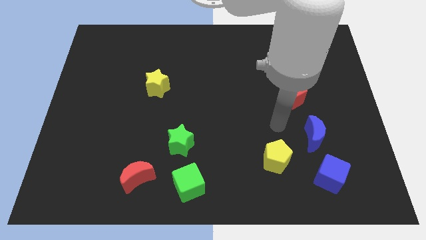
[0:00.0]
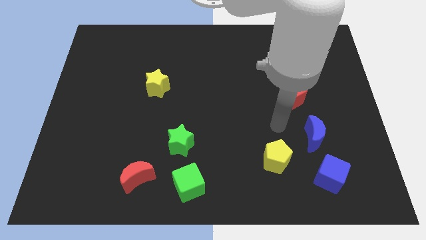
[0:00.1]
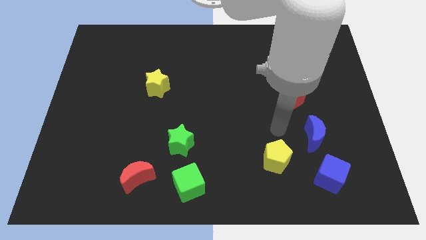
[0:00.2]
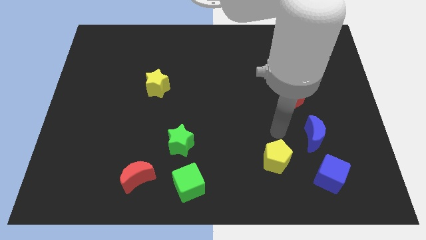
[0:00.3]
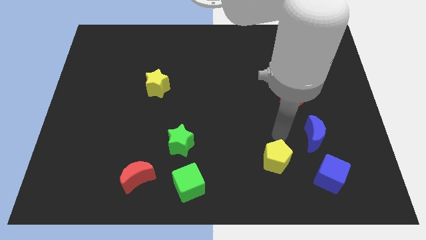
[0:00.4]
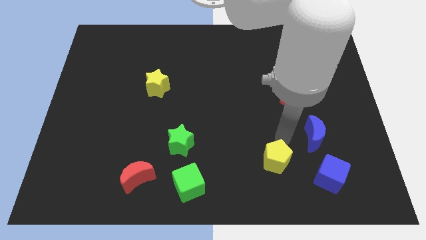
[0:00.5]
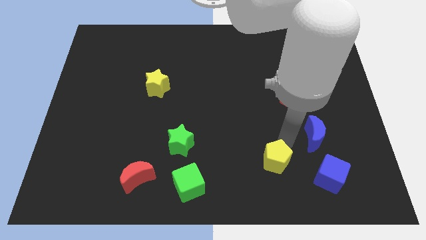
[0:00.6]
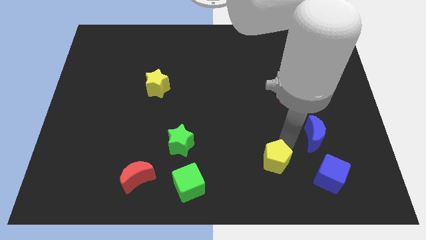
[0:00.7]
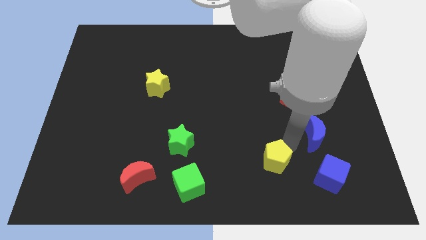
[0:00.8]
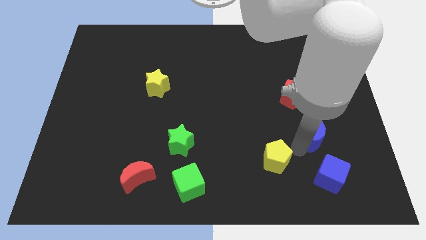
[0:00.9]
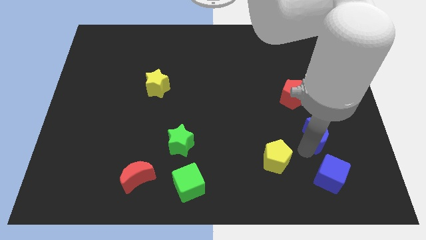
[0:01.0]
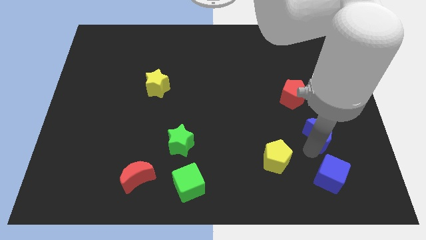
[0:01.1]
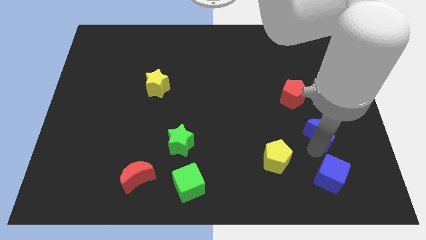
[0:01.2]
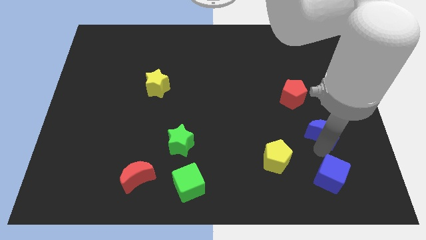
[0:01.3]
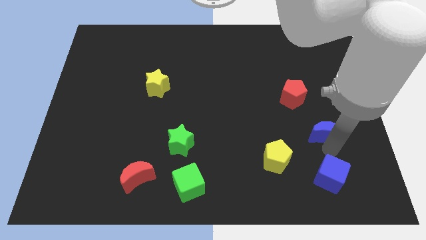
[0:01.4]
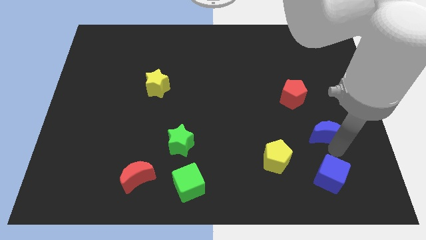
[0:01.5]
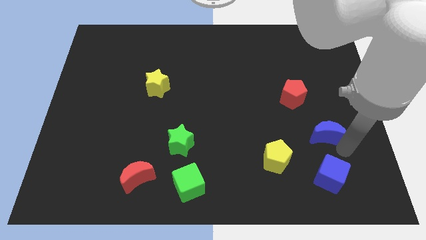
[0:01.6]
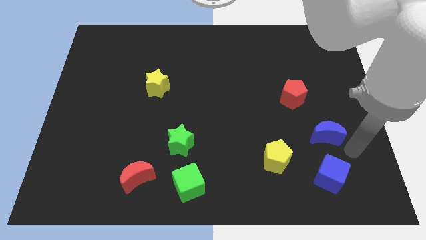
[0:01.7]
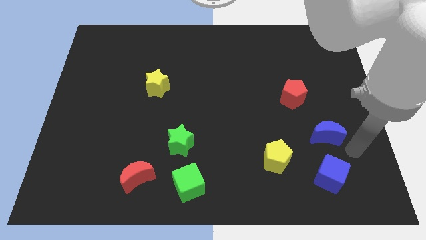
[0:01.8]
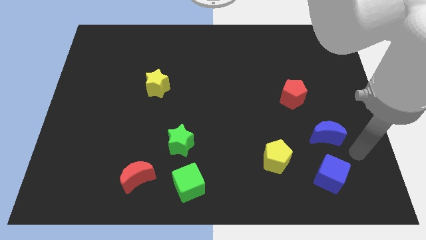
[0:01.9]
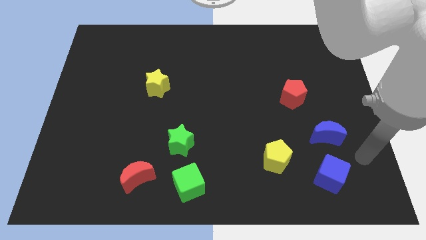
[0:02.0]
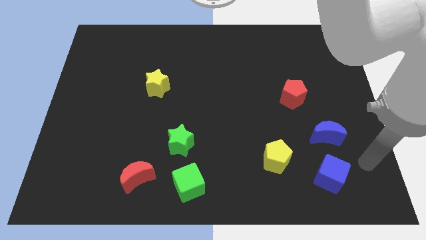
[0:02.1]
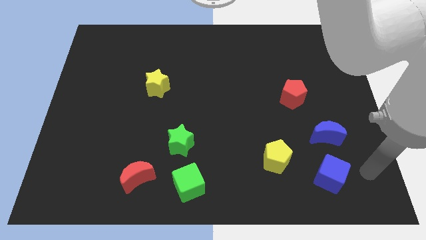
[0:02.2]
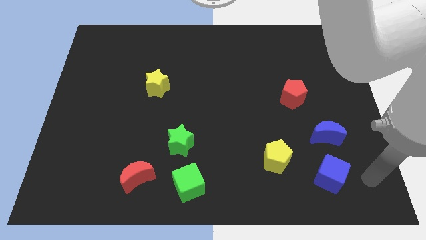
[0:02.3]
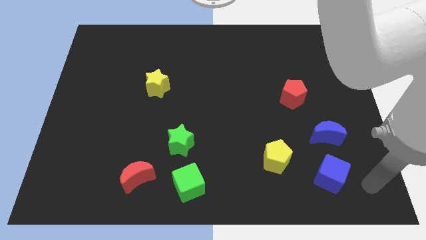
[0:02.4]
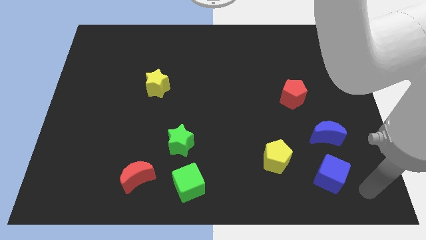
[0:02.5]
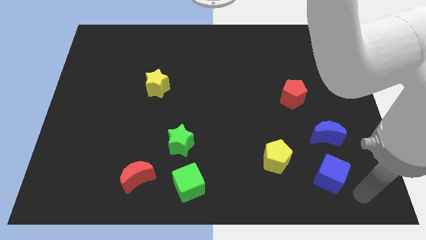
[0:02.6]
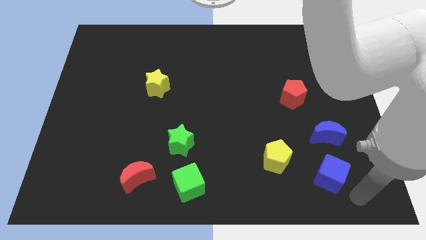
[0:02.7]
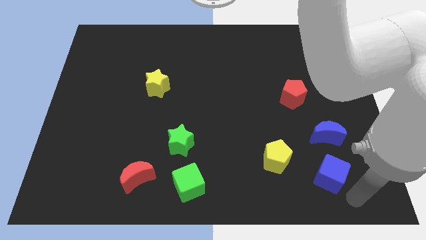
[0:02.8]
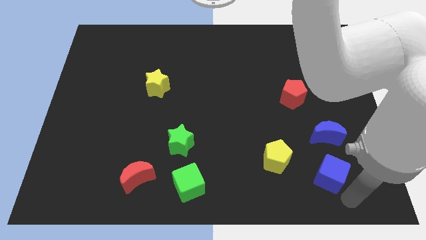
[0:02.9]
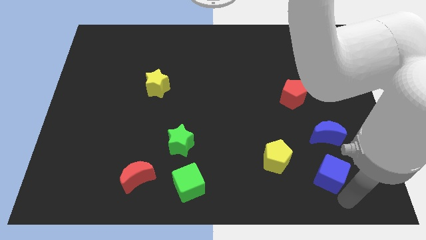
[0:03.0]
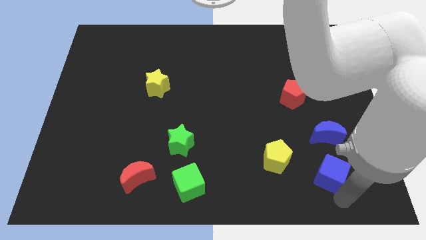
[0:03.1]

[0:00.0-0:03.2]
move your arm towards blue cube

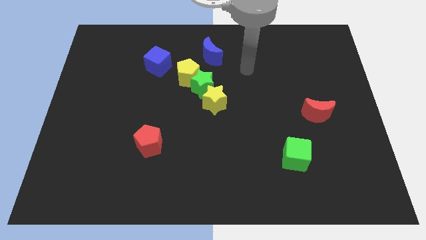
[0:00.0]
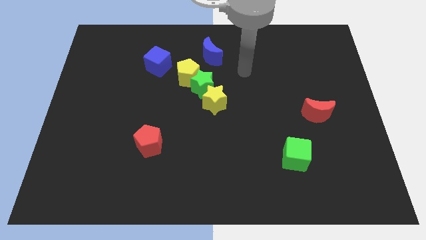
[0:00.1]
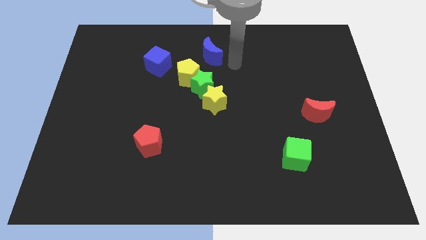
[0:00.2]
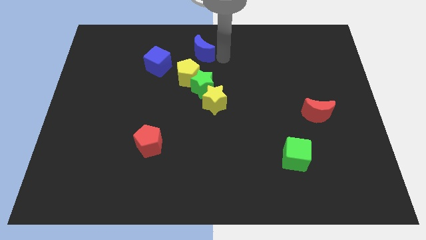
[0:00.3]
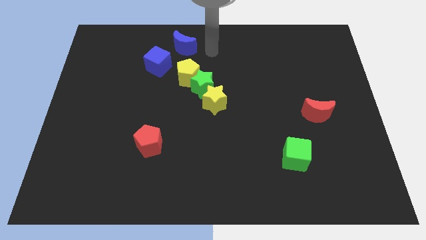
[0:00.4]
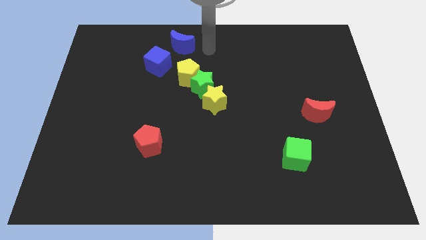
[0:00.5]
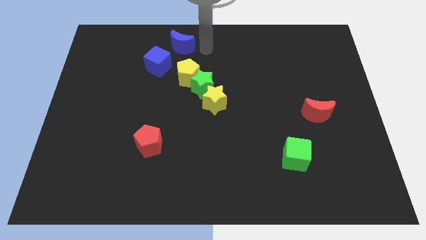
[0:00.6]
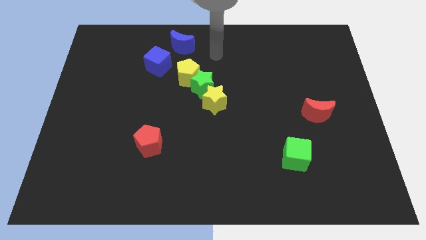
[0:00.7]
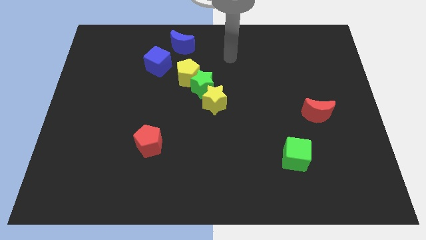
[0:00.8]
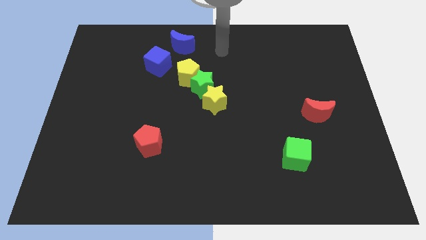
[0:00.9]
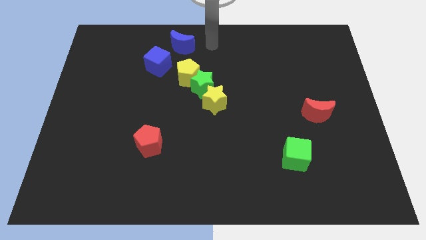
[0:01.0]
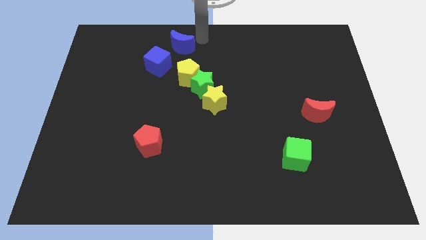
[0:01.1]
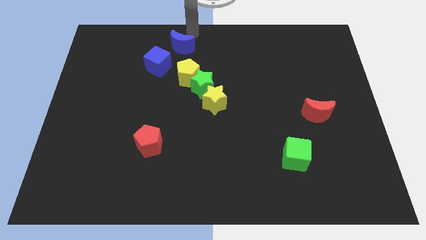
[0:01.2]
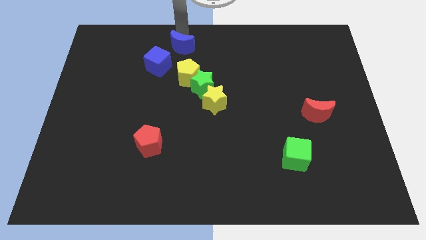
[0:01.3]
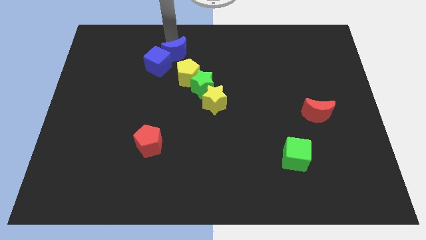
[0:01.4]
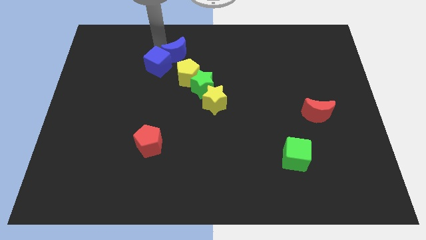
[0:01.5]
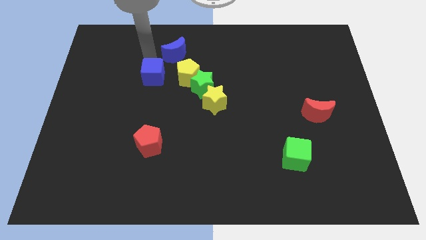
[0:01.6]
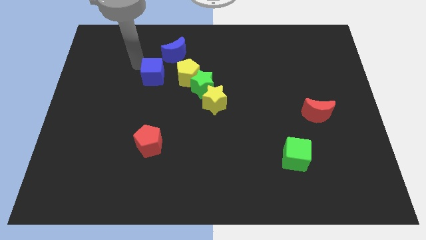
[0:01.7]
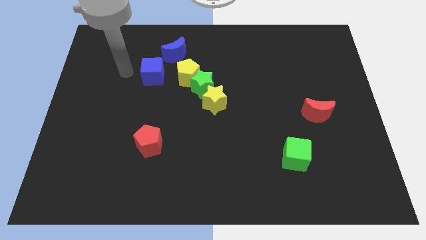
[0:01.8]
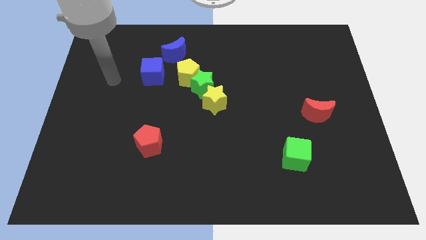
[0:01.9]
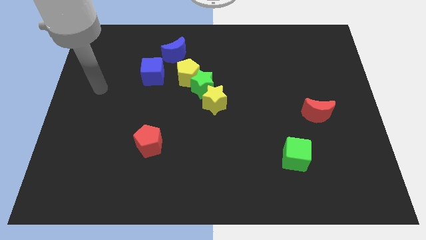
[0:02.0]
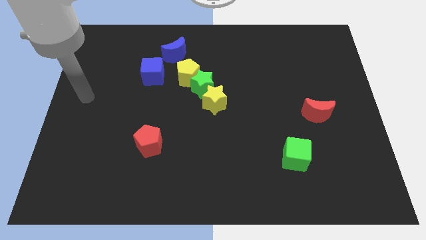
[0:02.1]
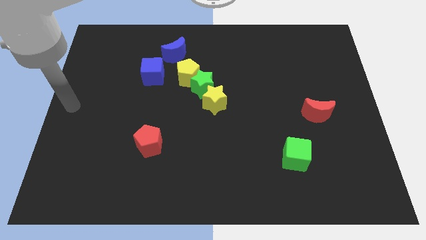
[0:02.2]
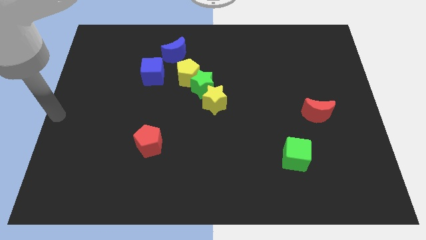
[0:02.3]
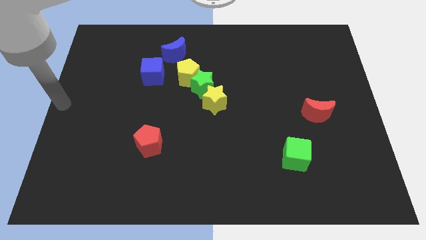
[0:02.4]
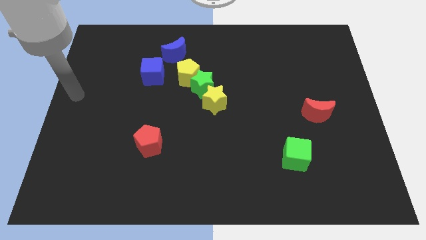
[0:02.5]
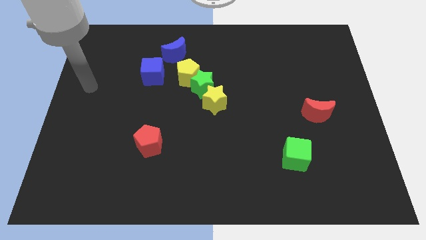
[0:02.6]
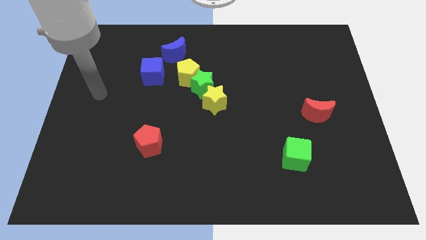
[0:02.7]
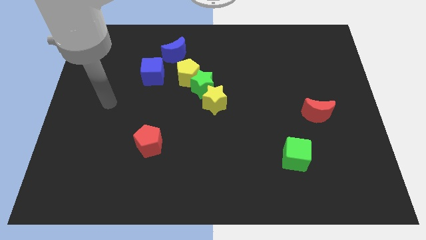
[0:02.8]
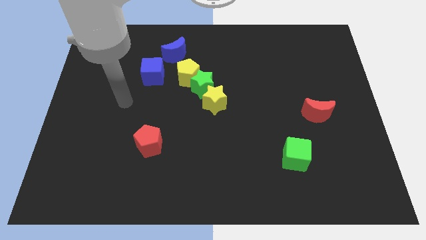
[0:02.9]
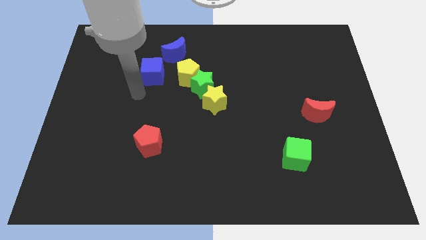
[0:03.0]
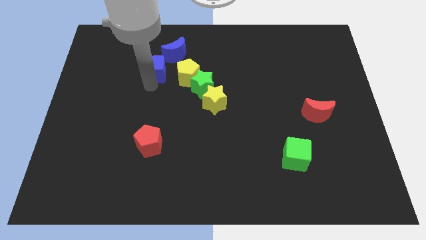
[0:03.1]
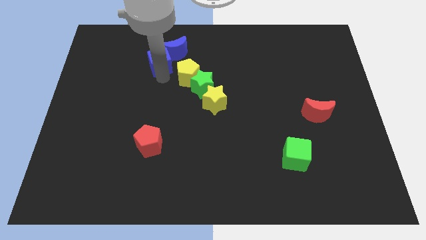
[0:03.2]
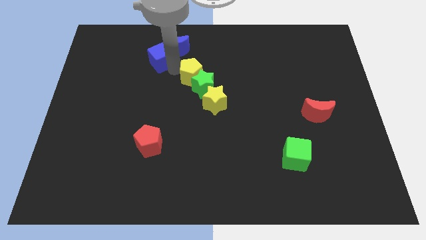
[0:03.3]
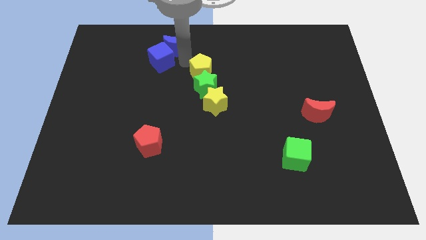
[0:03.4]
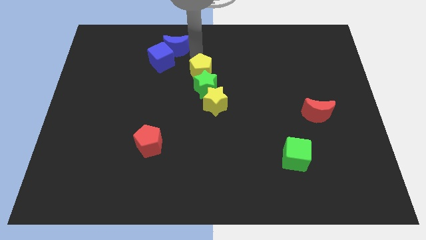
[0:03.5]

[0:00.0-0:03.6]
push the blue cube into the blue crescent

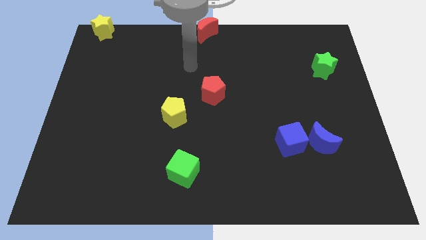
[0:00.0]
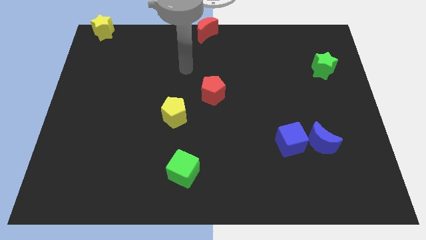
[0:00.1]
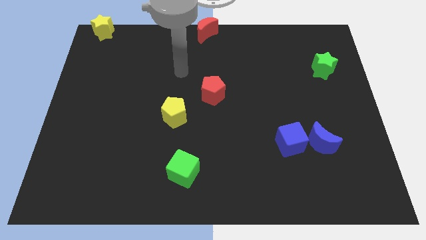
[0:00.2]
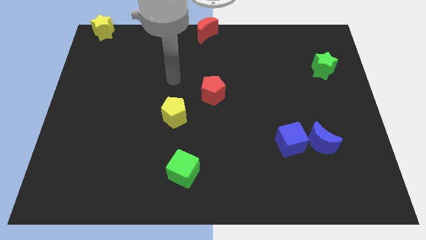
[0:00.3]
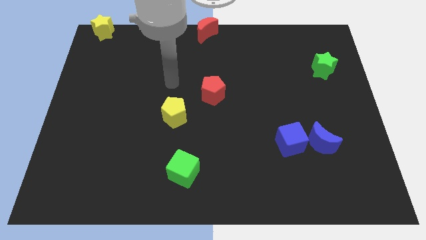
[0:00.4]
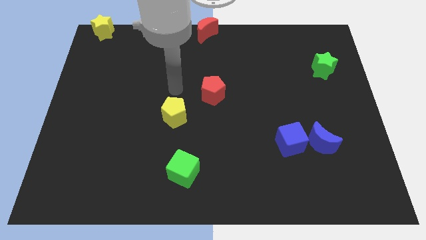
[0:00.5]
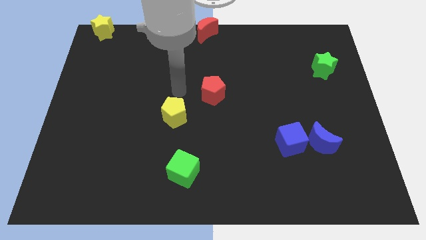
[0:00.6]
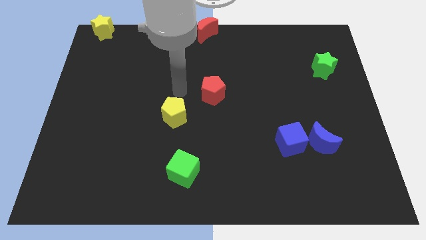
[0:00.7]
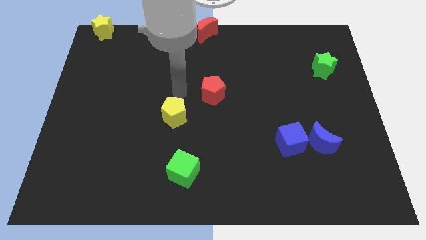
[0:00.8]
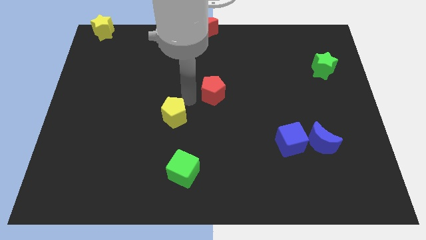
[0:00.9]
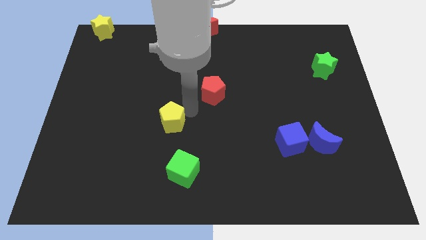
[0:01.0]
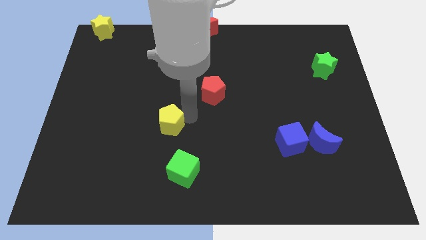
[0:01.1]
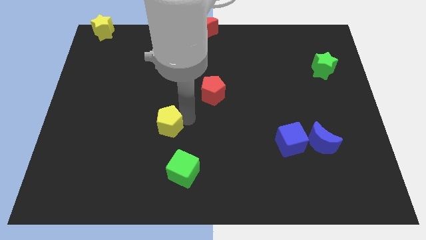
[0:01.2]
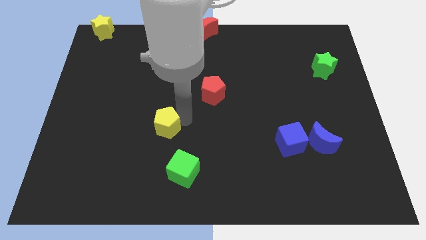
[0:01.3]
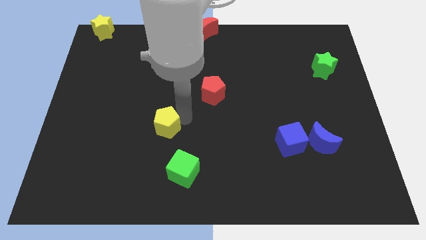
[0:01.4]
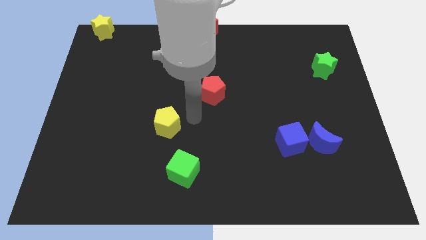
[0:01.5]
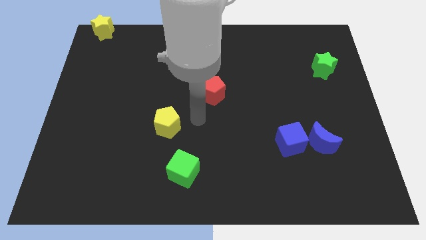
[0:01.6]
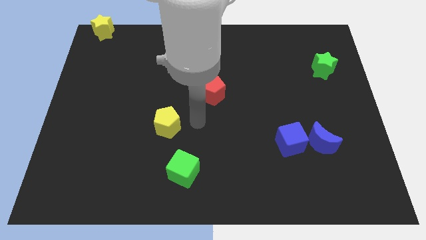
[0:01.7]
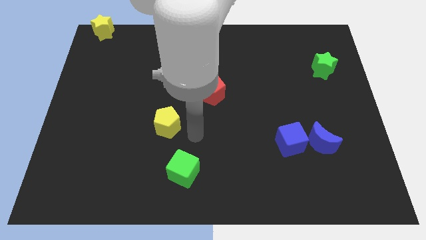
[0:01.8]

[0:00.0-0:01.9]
push the yellow pentagon on top of green cube

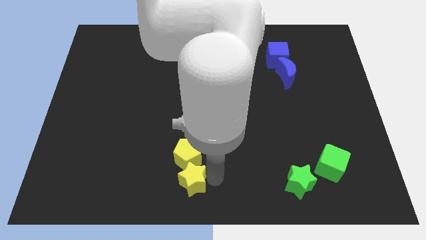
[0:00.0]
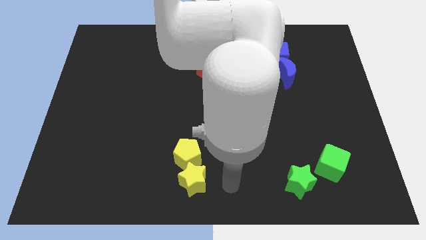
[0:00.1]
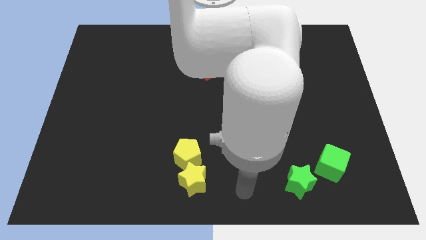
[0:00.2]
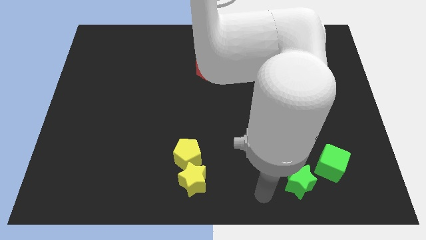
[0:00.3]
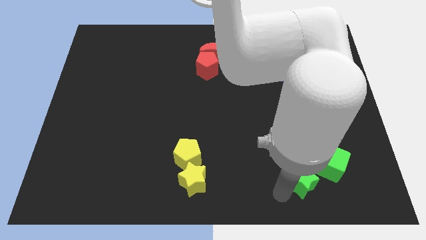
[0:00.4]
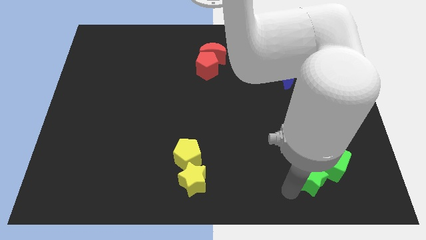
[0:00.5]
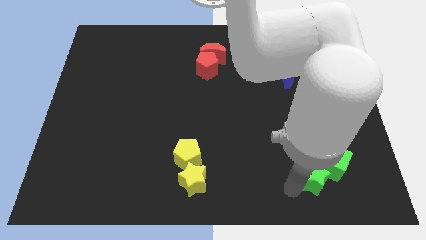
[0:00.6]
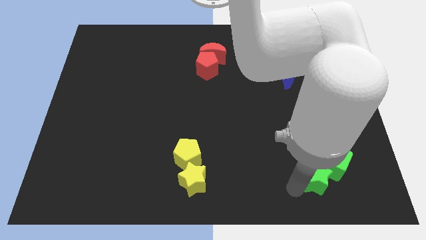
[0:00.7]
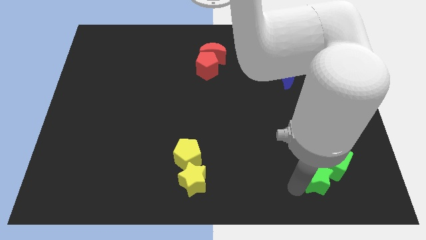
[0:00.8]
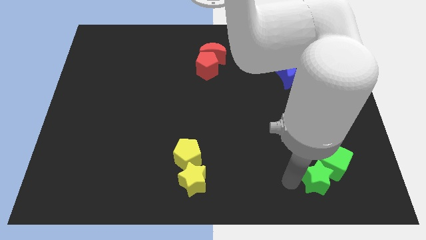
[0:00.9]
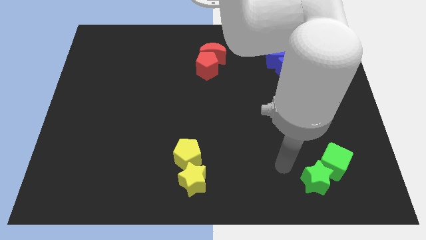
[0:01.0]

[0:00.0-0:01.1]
move the green star into the bottom left side of the green cube
